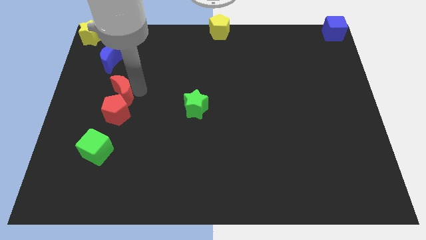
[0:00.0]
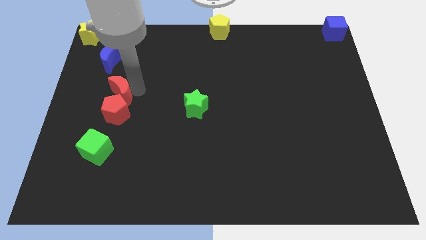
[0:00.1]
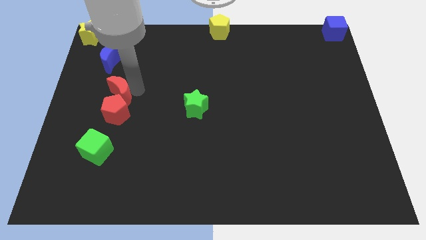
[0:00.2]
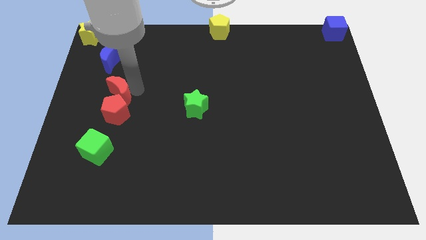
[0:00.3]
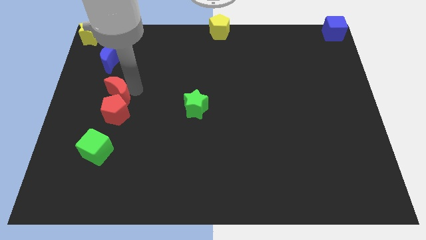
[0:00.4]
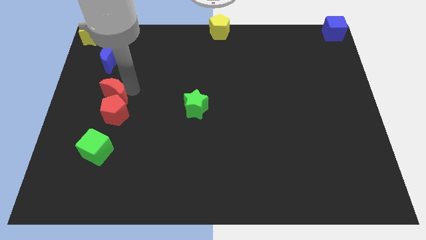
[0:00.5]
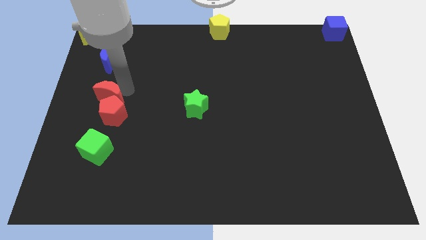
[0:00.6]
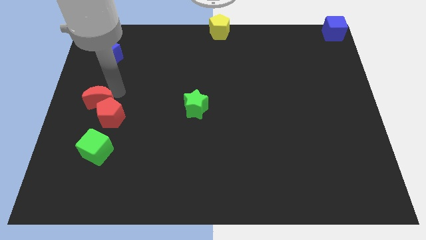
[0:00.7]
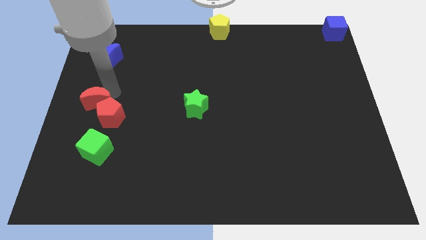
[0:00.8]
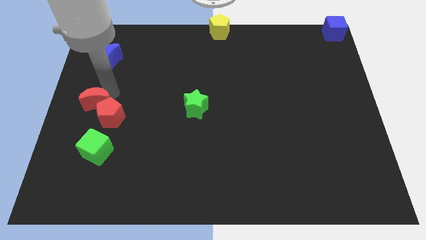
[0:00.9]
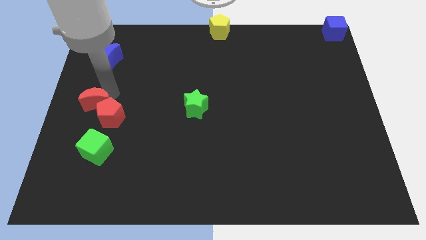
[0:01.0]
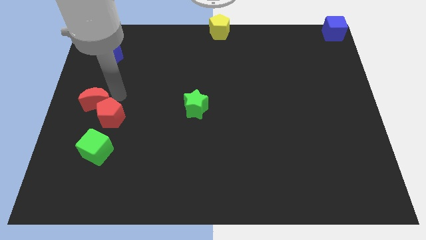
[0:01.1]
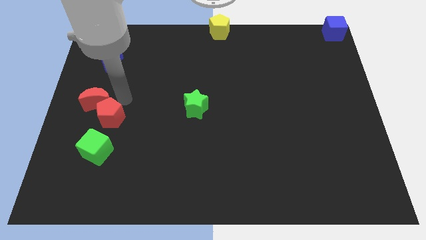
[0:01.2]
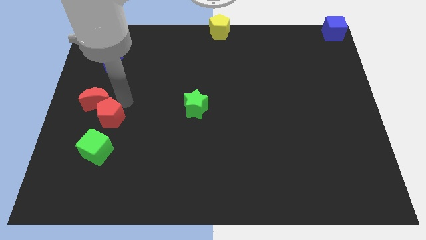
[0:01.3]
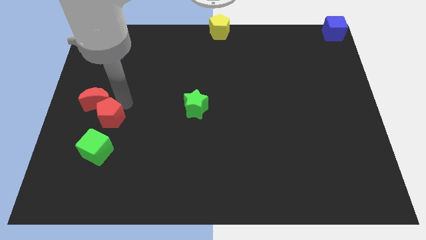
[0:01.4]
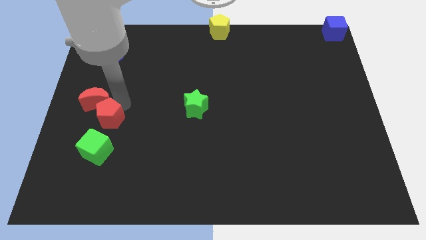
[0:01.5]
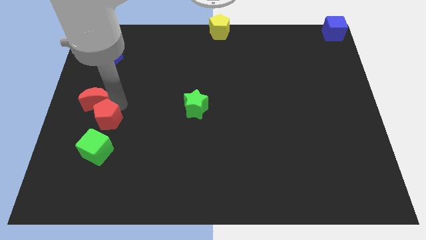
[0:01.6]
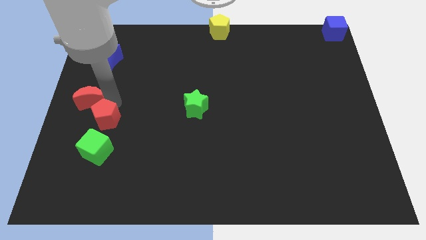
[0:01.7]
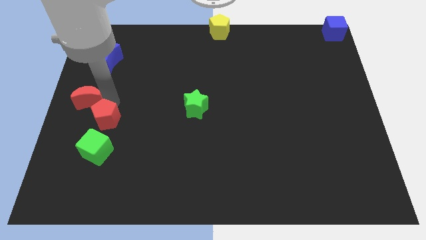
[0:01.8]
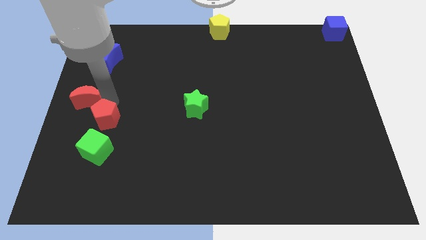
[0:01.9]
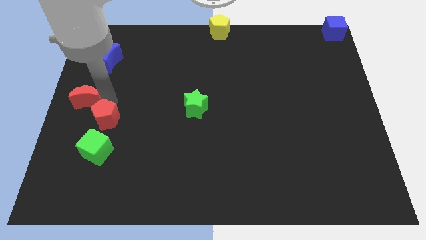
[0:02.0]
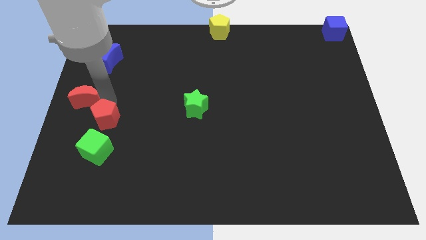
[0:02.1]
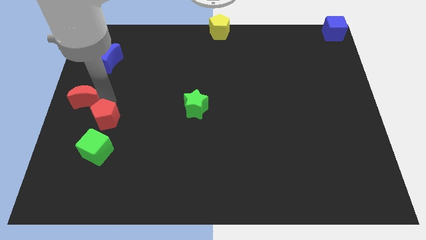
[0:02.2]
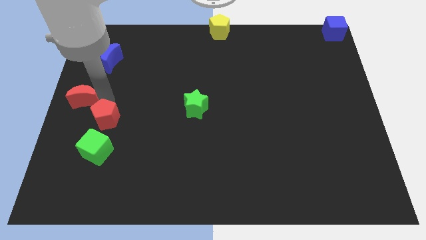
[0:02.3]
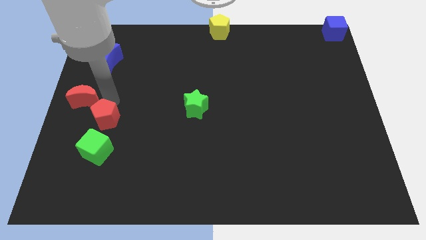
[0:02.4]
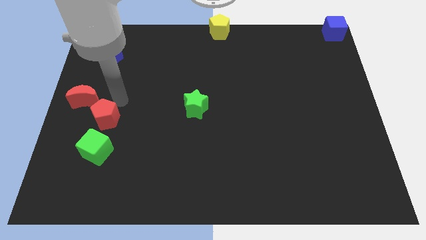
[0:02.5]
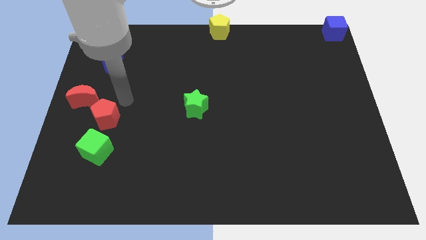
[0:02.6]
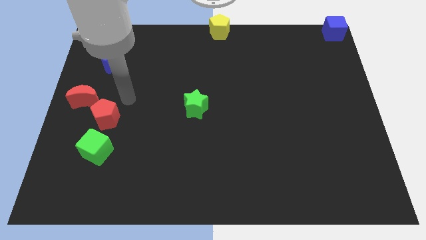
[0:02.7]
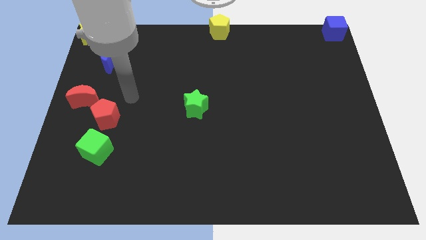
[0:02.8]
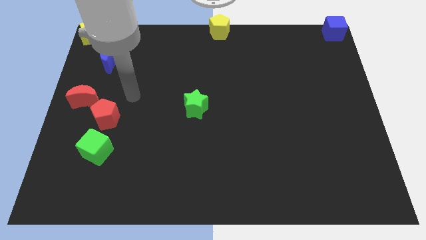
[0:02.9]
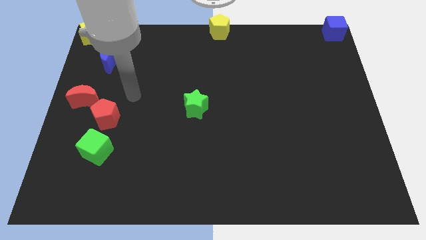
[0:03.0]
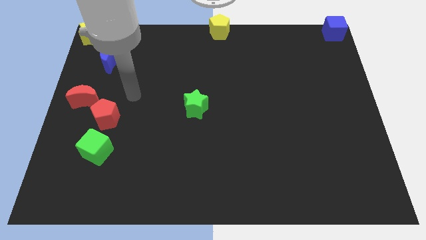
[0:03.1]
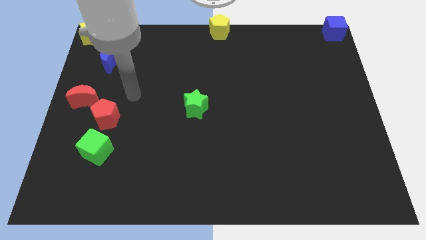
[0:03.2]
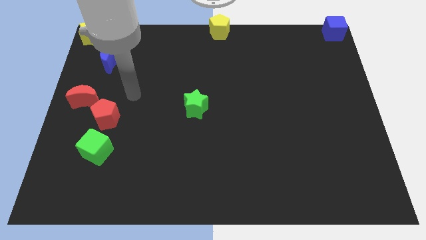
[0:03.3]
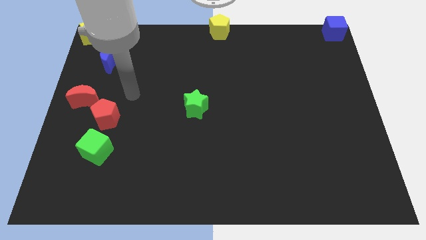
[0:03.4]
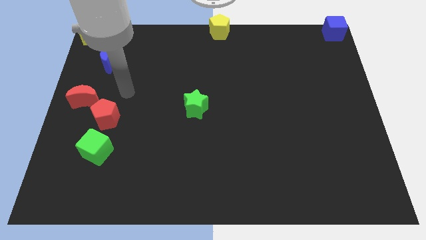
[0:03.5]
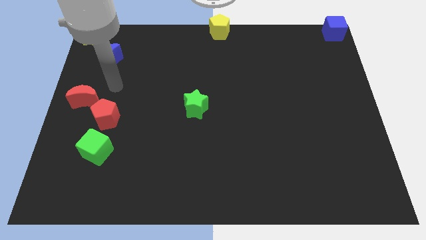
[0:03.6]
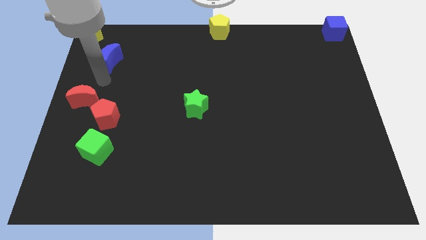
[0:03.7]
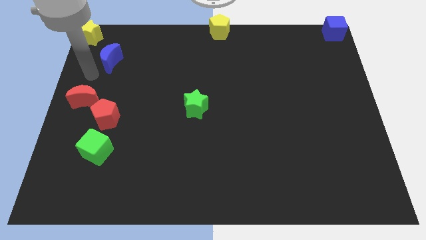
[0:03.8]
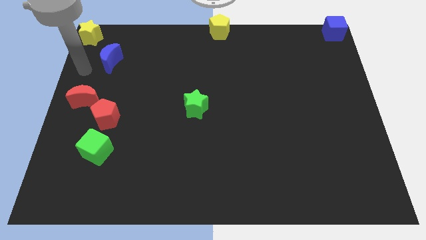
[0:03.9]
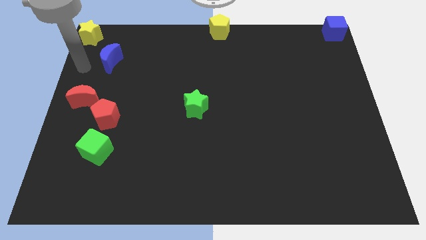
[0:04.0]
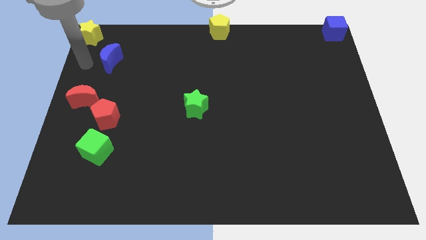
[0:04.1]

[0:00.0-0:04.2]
place the red moon diagonally top left to the green cube

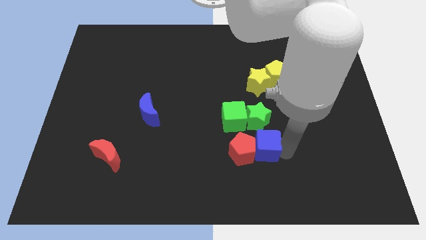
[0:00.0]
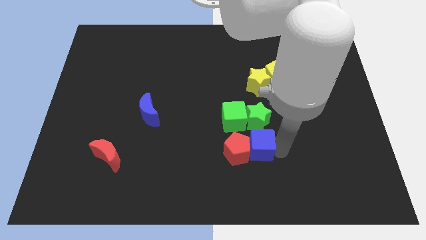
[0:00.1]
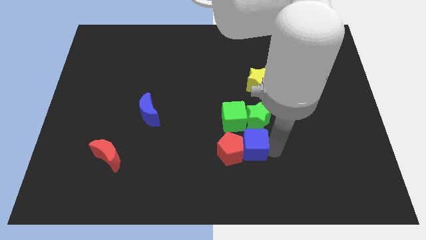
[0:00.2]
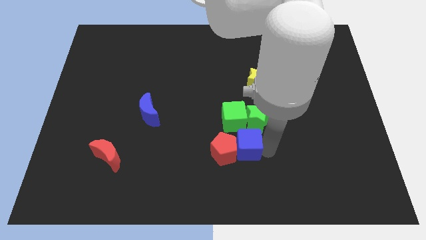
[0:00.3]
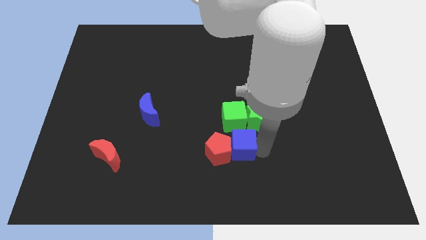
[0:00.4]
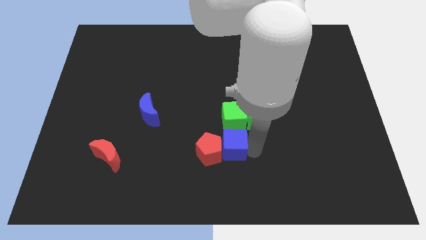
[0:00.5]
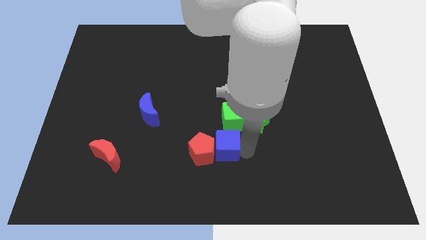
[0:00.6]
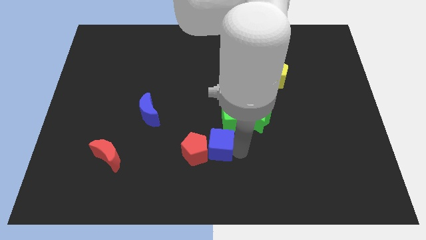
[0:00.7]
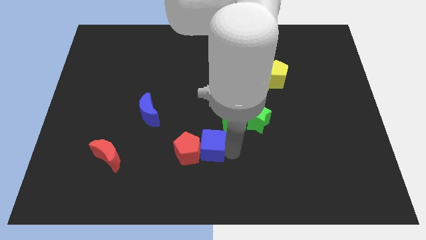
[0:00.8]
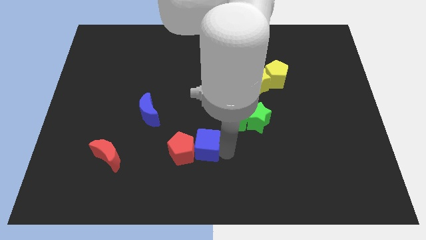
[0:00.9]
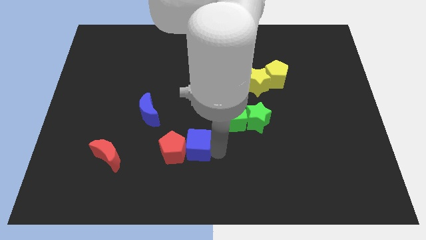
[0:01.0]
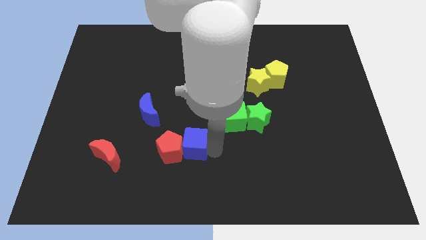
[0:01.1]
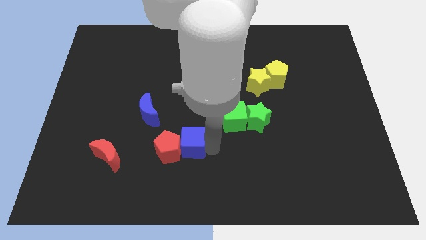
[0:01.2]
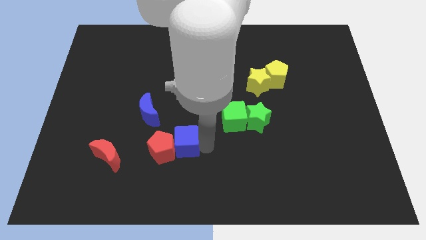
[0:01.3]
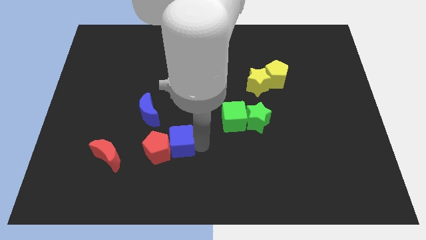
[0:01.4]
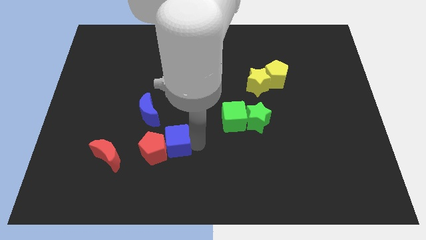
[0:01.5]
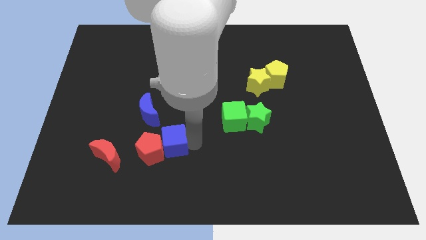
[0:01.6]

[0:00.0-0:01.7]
move the blue cube and red pentagon below the blue moon

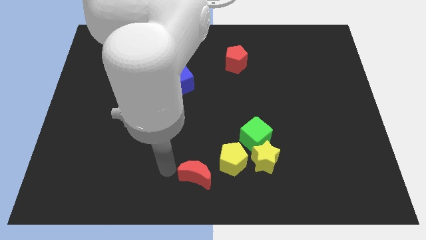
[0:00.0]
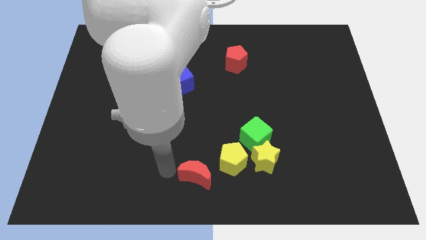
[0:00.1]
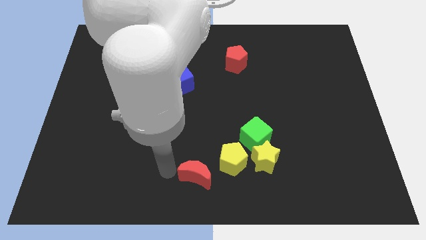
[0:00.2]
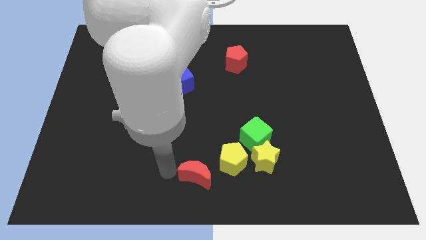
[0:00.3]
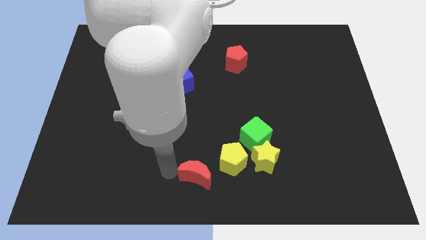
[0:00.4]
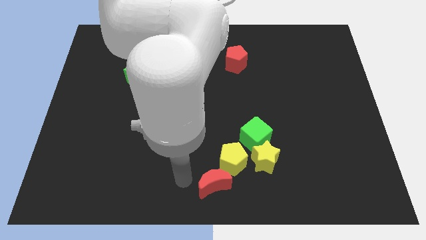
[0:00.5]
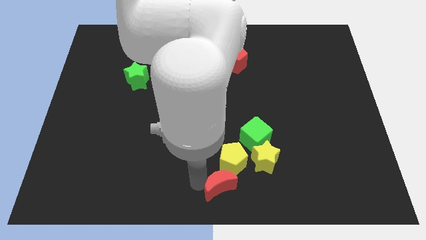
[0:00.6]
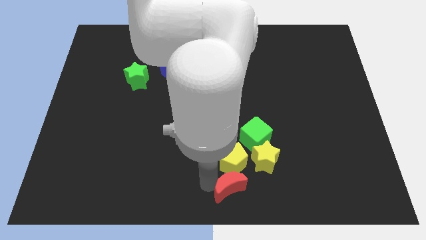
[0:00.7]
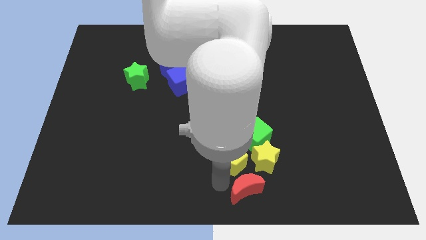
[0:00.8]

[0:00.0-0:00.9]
place the red moon down to the yellow pentagon

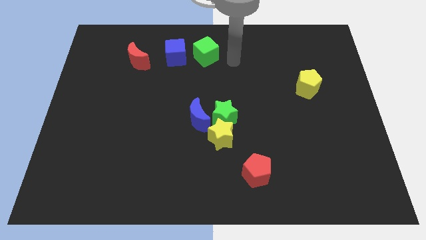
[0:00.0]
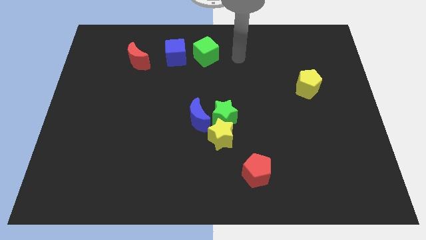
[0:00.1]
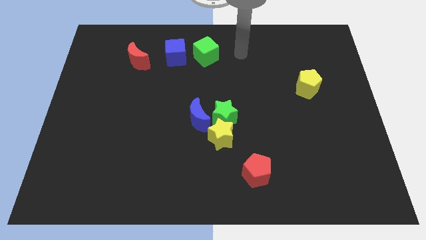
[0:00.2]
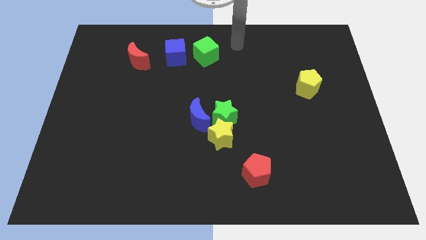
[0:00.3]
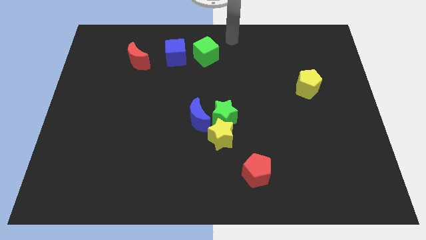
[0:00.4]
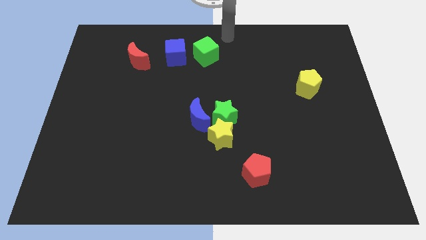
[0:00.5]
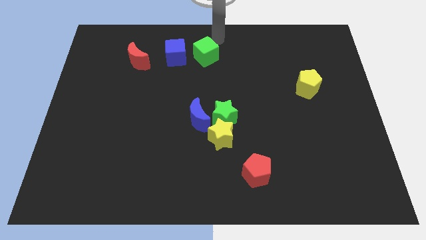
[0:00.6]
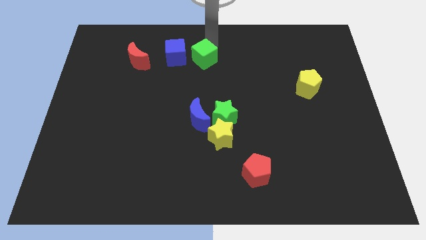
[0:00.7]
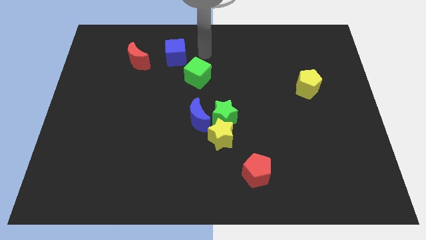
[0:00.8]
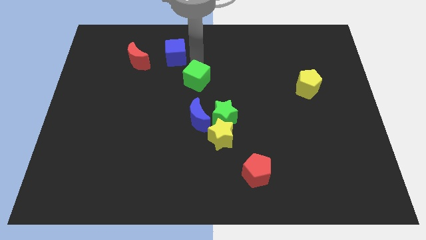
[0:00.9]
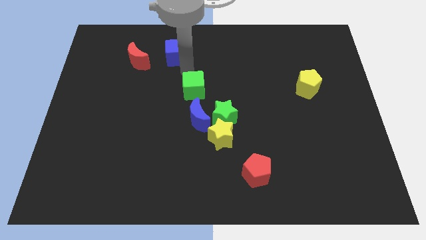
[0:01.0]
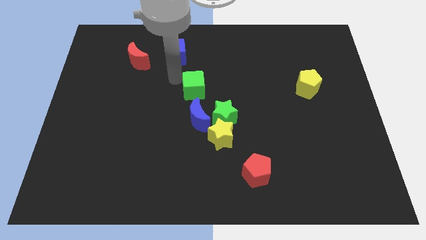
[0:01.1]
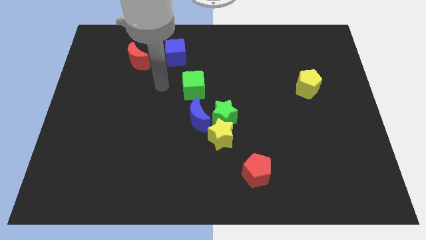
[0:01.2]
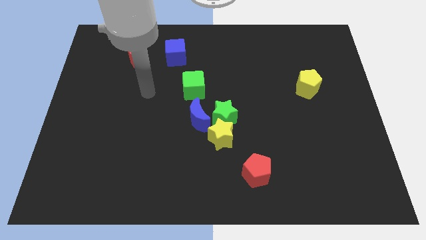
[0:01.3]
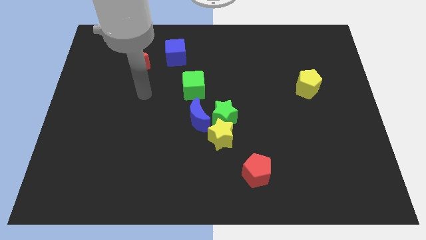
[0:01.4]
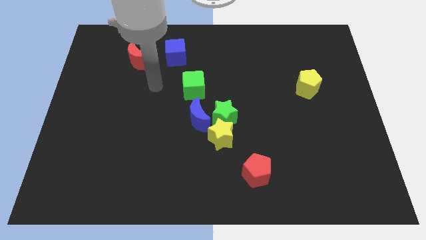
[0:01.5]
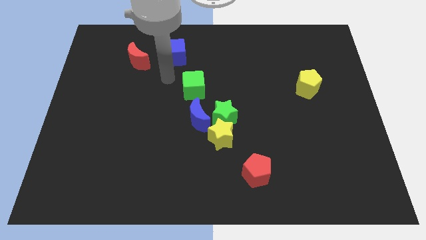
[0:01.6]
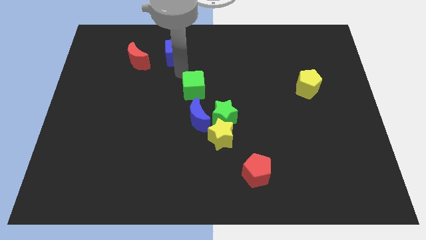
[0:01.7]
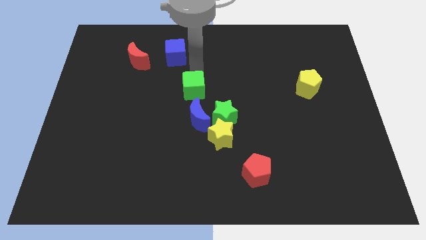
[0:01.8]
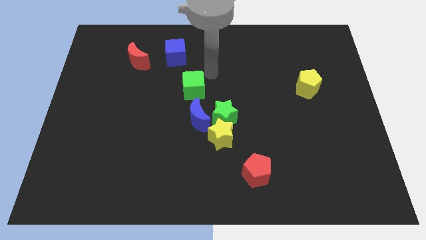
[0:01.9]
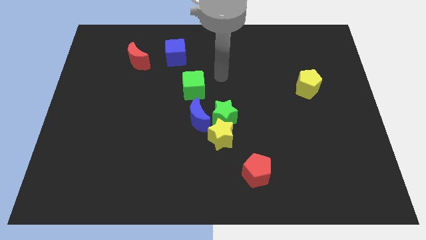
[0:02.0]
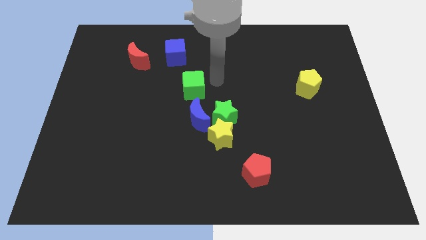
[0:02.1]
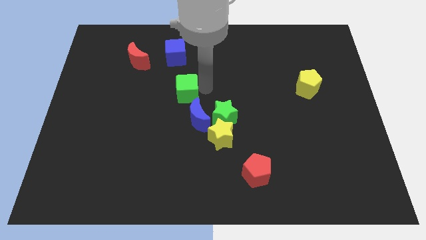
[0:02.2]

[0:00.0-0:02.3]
place the green cube above the blue crescent
